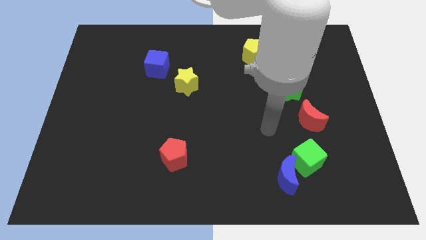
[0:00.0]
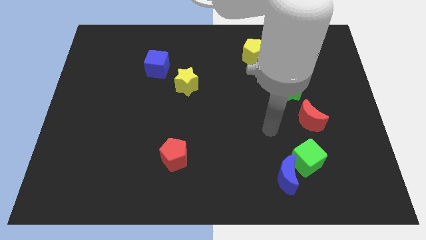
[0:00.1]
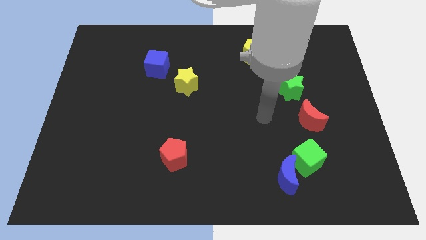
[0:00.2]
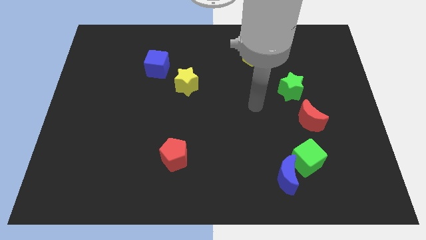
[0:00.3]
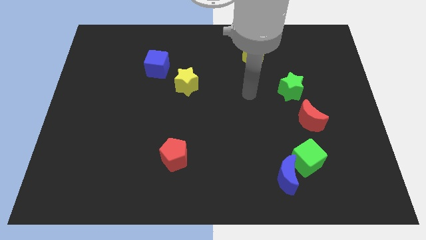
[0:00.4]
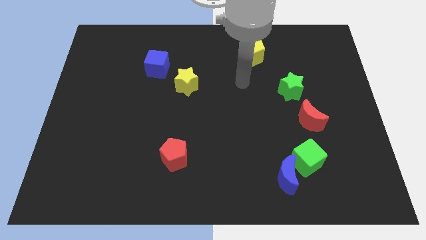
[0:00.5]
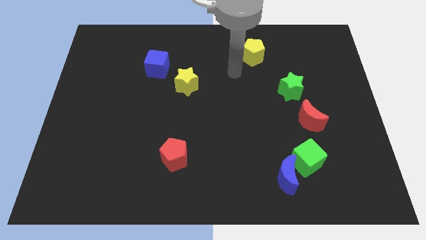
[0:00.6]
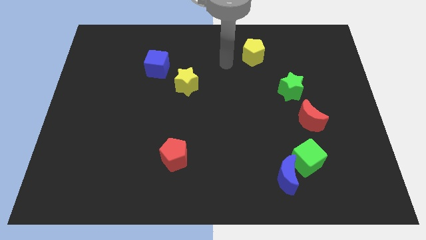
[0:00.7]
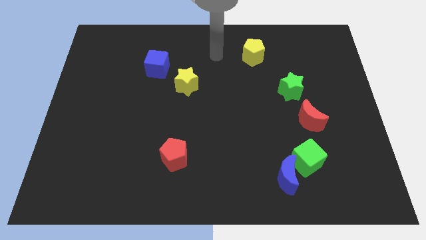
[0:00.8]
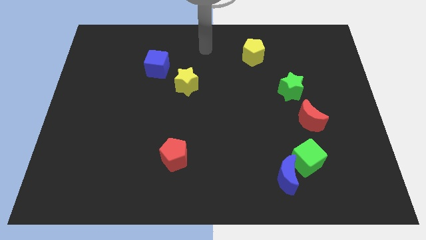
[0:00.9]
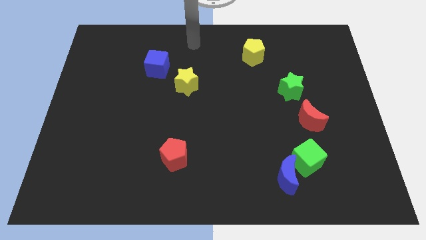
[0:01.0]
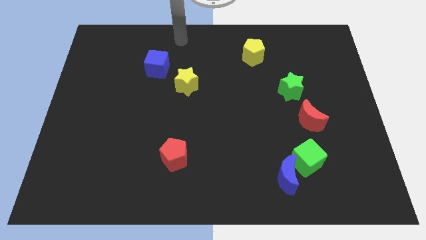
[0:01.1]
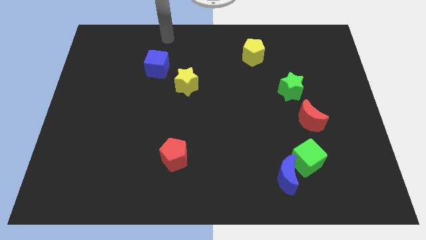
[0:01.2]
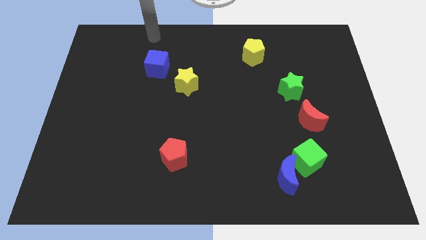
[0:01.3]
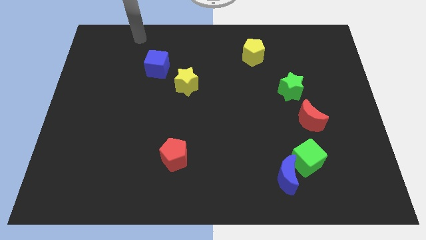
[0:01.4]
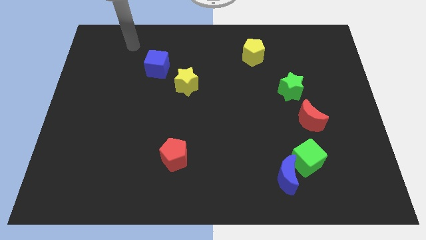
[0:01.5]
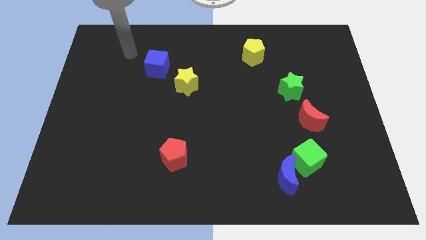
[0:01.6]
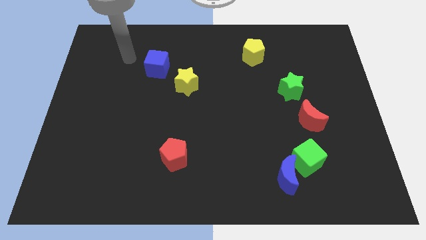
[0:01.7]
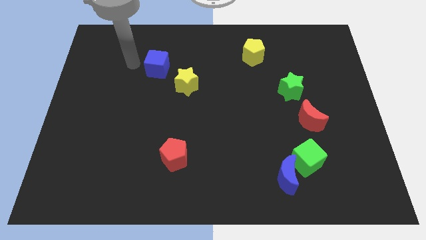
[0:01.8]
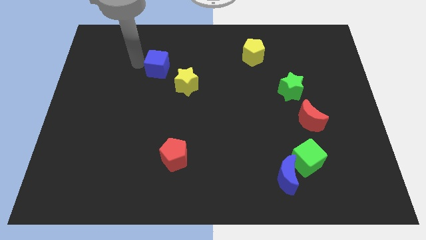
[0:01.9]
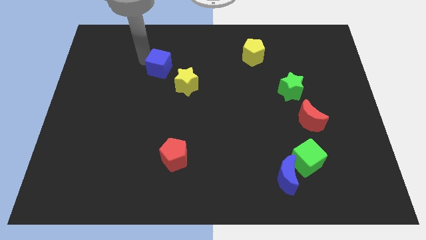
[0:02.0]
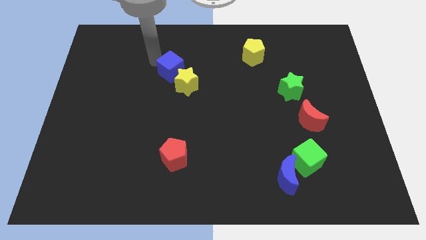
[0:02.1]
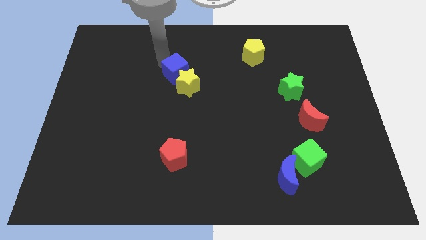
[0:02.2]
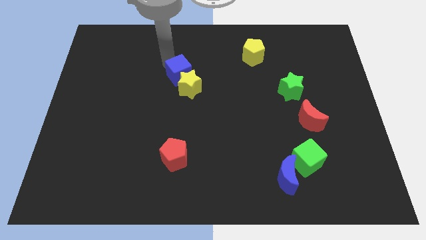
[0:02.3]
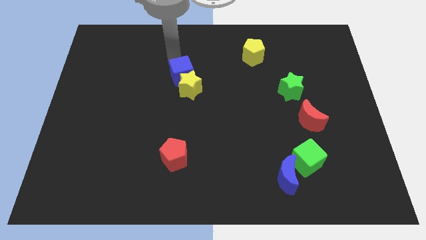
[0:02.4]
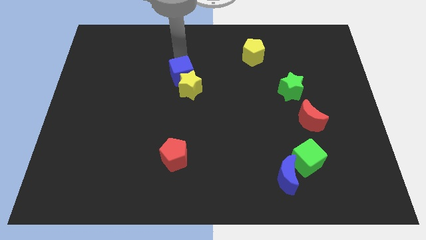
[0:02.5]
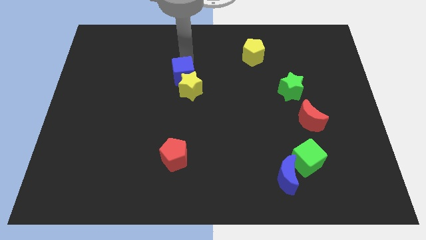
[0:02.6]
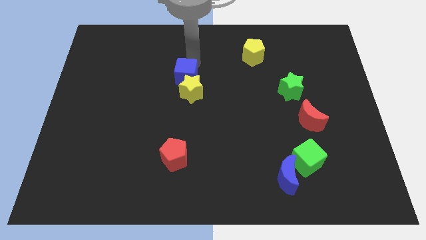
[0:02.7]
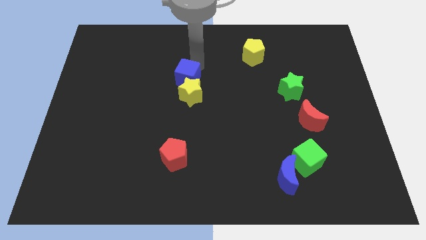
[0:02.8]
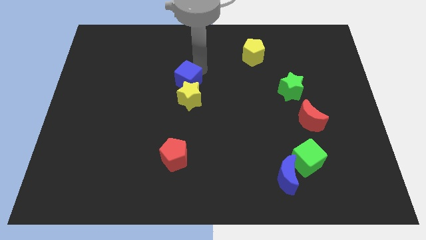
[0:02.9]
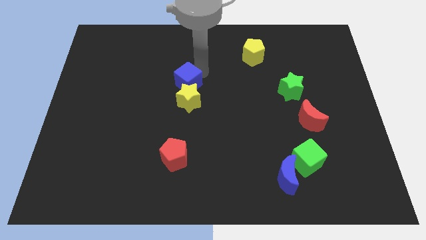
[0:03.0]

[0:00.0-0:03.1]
move the blue cube and yellow star slightly towards the center of the board

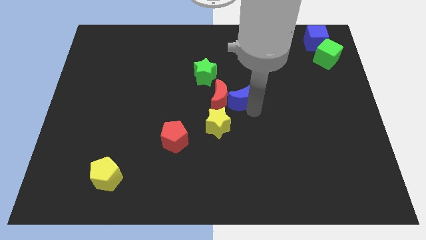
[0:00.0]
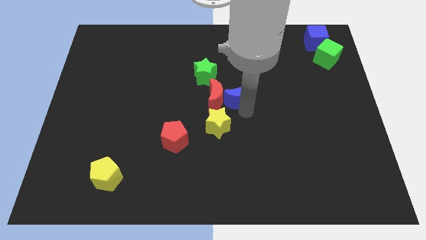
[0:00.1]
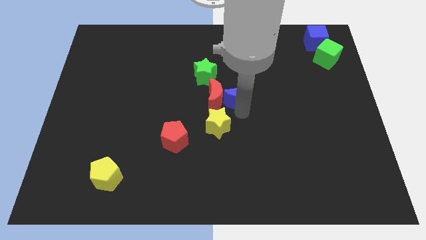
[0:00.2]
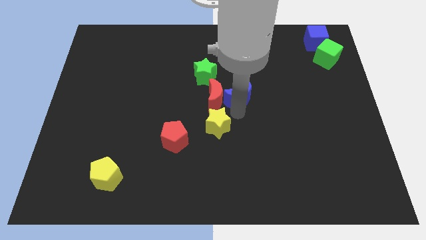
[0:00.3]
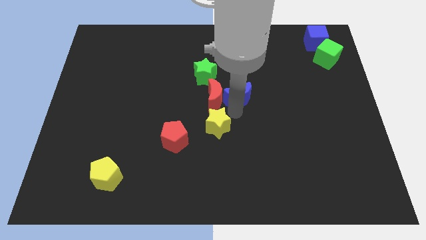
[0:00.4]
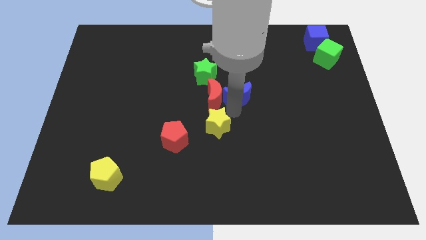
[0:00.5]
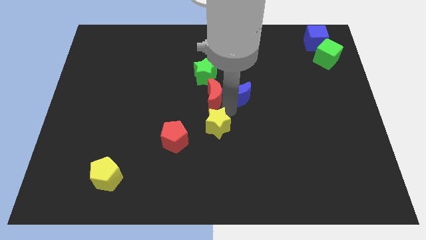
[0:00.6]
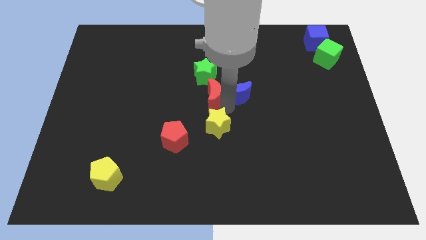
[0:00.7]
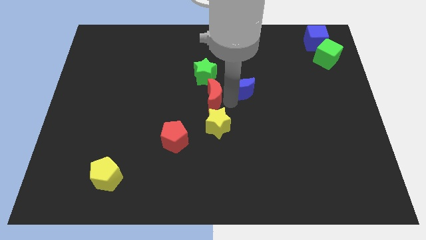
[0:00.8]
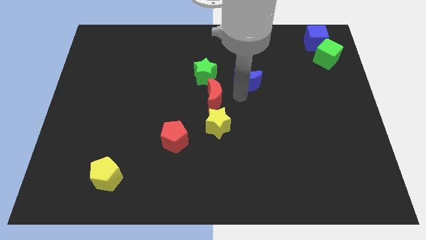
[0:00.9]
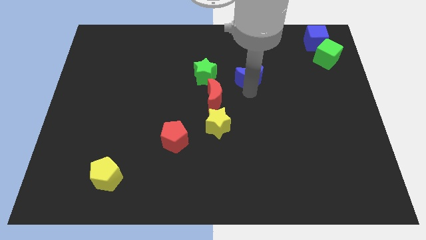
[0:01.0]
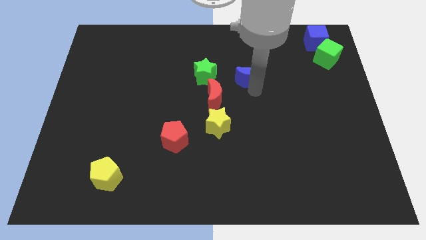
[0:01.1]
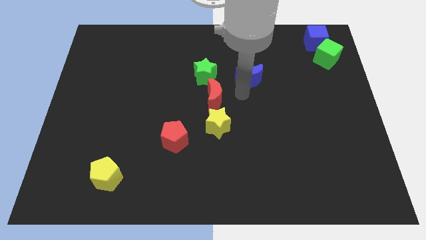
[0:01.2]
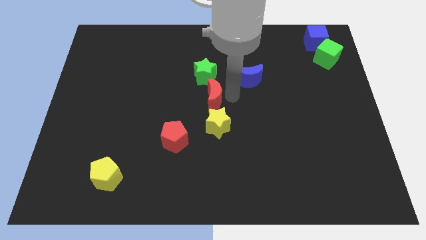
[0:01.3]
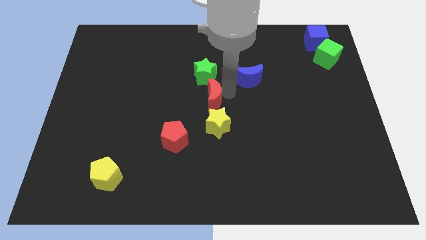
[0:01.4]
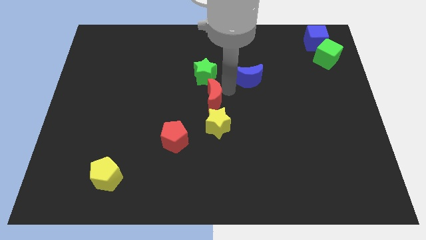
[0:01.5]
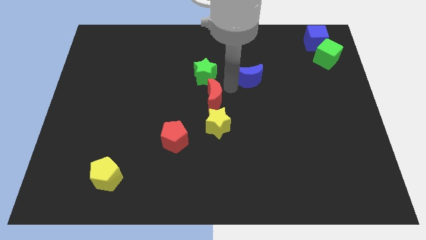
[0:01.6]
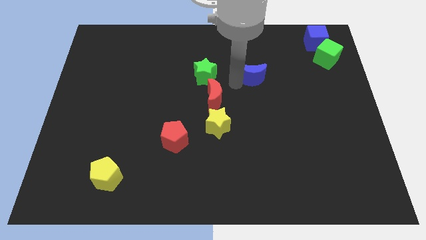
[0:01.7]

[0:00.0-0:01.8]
separate the blue crescent from the red crescent

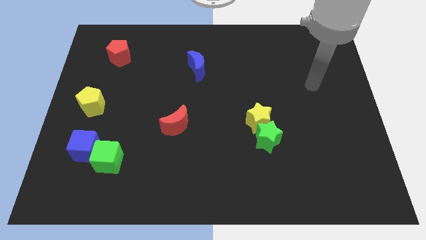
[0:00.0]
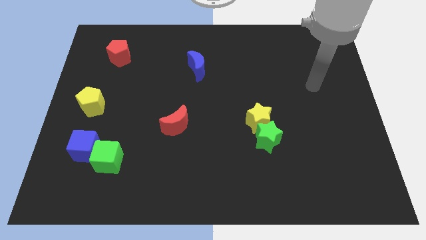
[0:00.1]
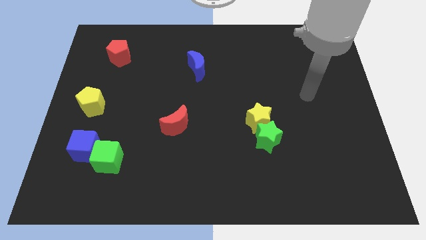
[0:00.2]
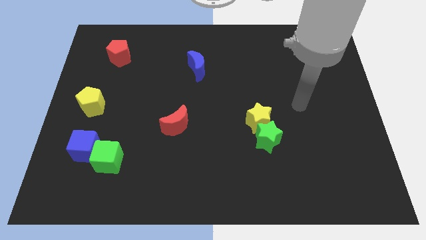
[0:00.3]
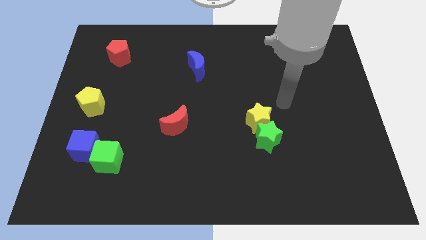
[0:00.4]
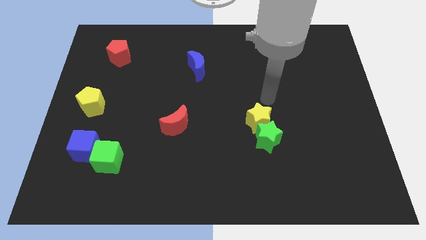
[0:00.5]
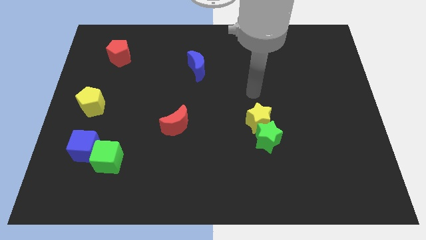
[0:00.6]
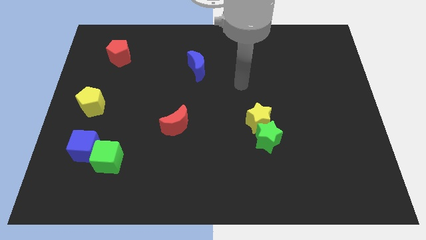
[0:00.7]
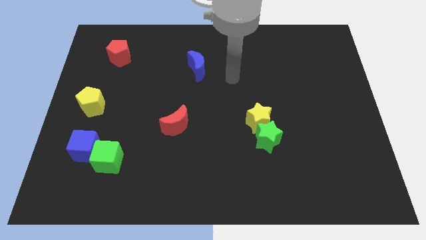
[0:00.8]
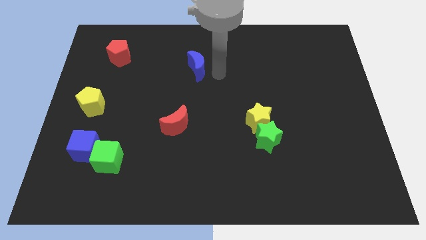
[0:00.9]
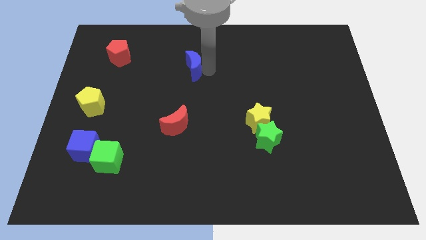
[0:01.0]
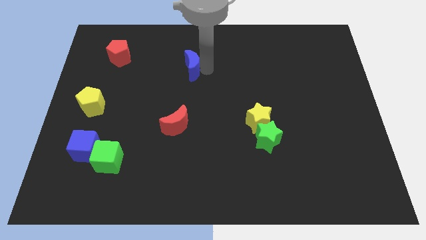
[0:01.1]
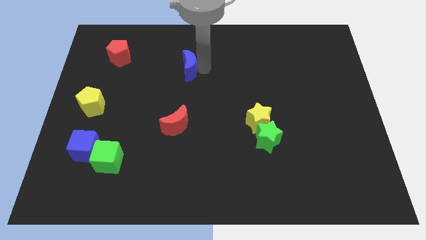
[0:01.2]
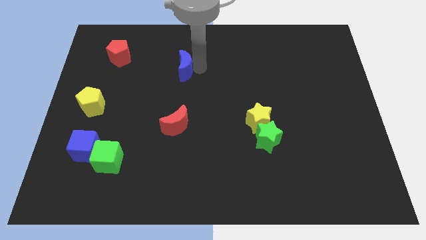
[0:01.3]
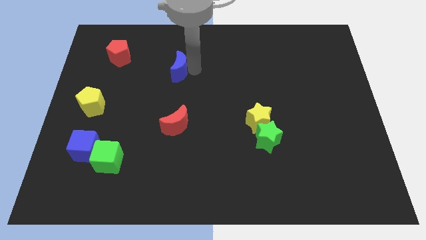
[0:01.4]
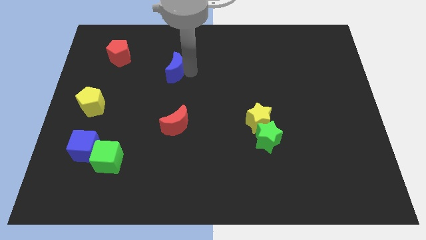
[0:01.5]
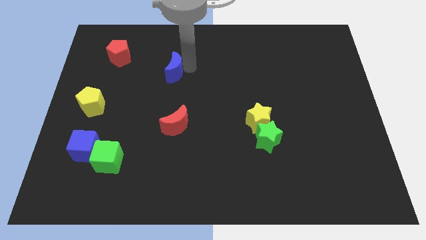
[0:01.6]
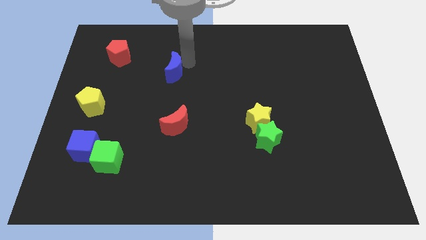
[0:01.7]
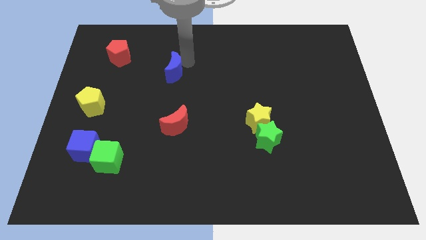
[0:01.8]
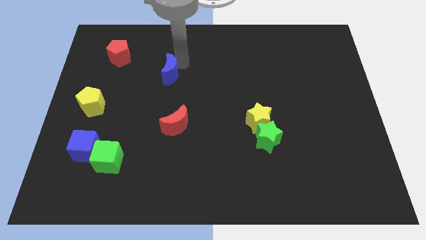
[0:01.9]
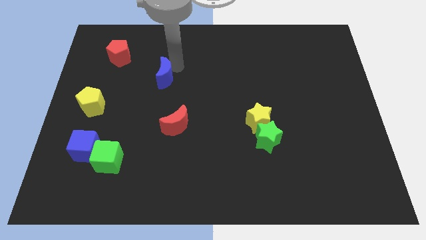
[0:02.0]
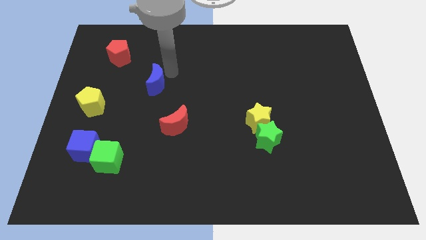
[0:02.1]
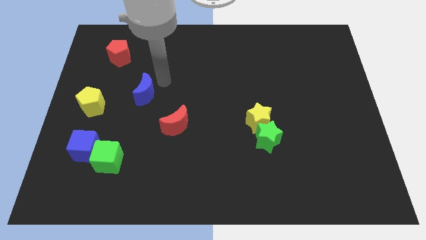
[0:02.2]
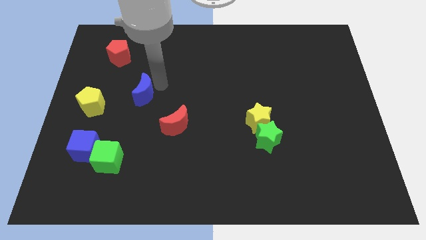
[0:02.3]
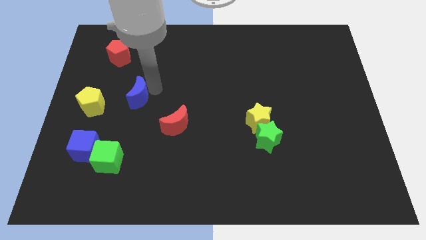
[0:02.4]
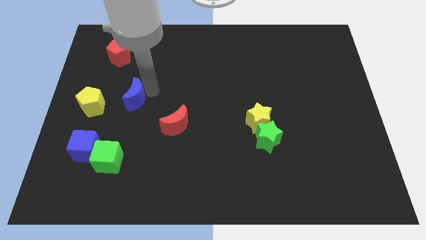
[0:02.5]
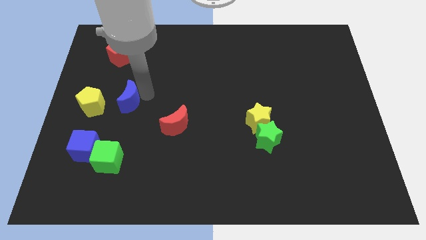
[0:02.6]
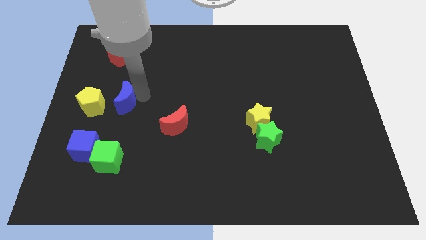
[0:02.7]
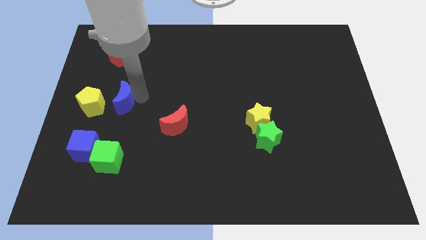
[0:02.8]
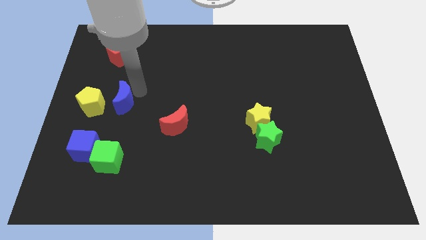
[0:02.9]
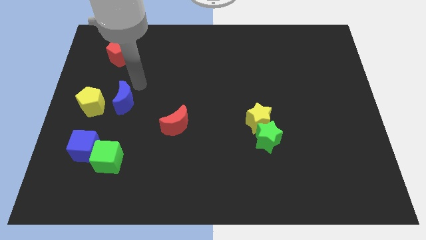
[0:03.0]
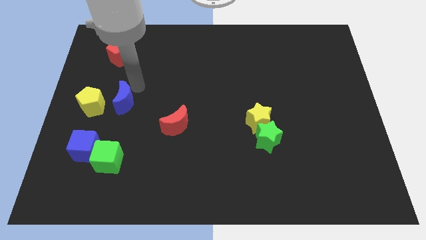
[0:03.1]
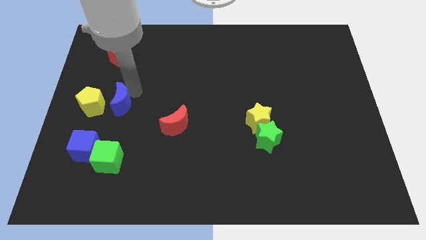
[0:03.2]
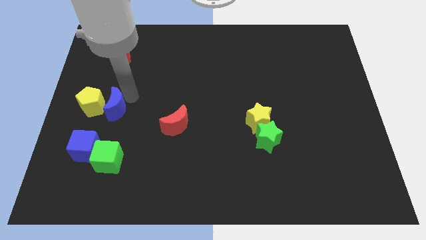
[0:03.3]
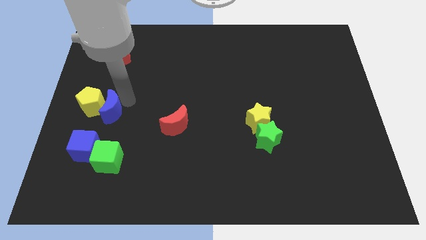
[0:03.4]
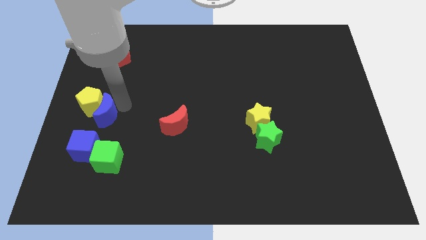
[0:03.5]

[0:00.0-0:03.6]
push blue crescent into the yellow pentagon

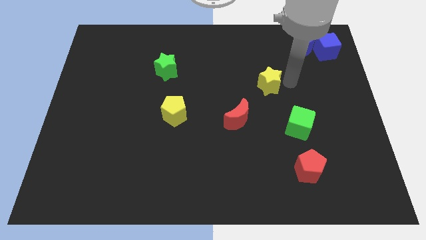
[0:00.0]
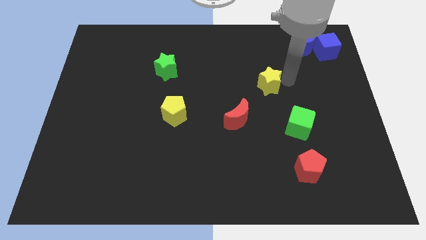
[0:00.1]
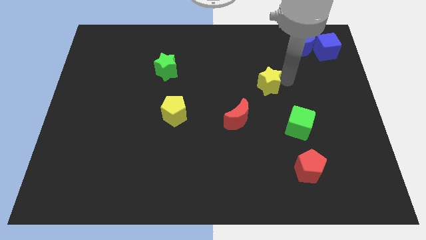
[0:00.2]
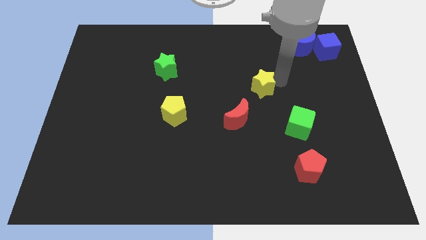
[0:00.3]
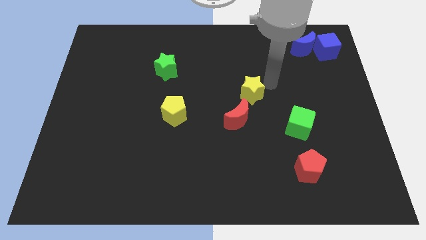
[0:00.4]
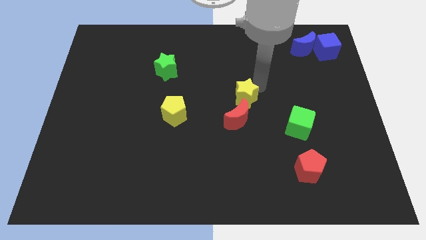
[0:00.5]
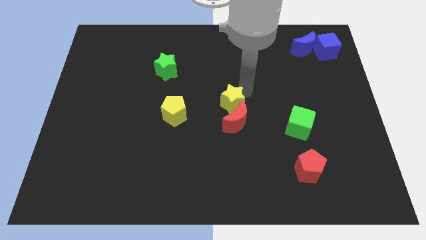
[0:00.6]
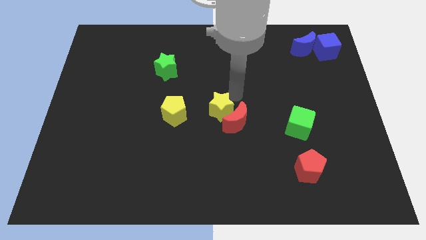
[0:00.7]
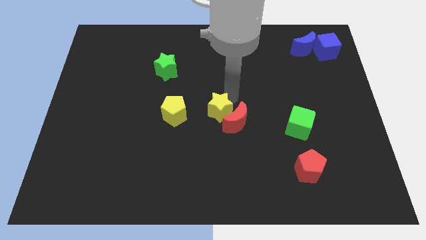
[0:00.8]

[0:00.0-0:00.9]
place yellow star to the center of the board
